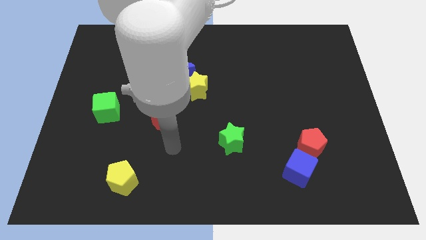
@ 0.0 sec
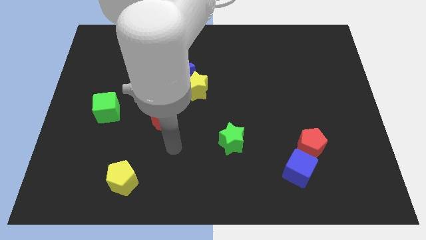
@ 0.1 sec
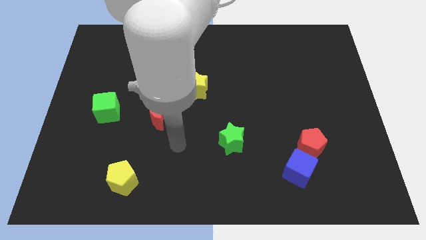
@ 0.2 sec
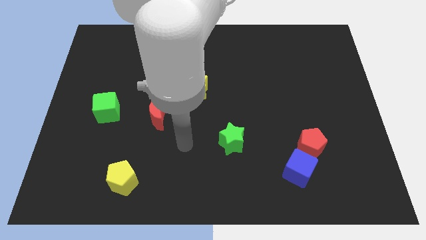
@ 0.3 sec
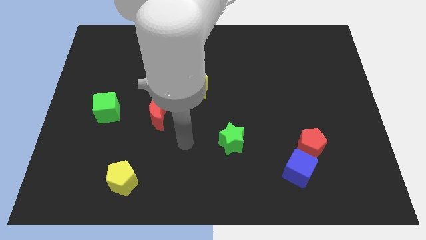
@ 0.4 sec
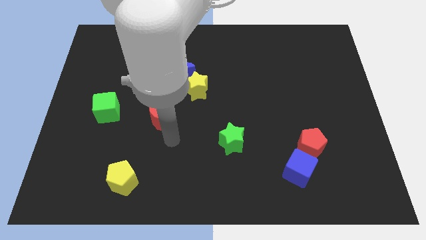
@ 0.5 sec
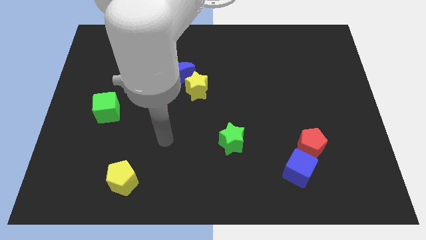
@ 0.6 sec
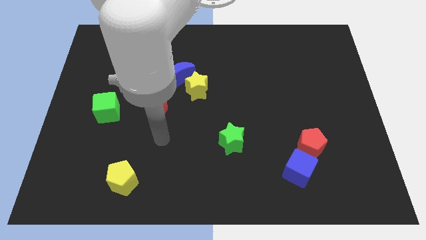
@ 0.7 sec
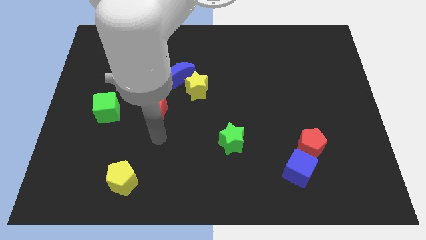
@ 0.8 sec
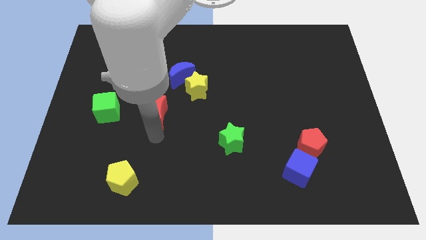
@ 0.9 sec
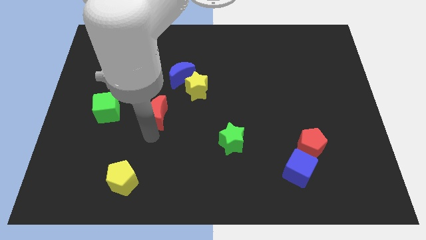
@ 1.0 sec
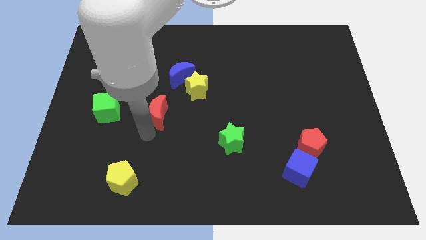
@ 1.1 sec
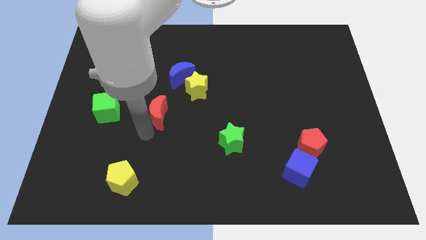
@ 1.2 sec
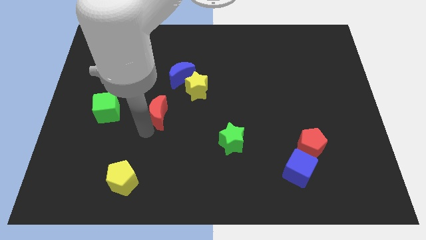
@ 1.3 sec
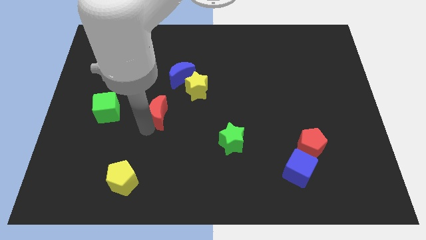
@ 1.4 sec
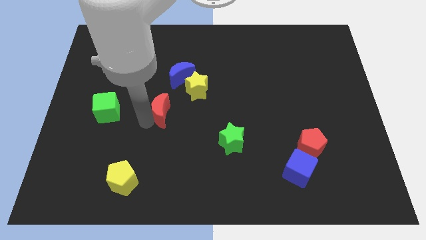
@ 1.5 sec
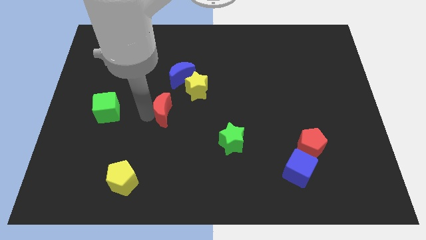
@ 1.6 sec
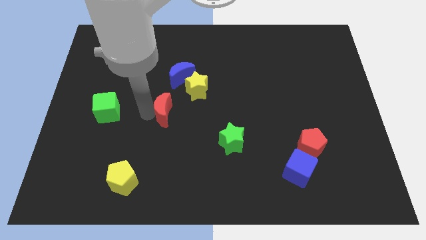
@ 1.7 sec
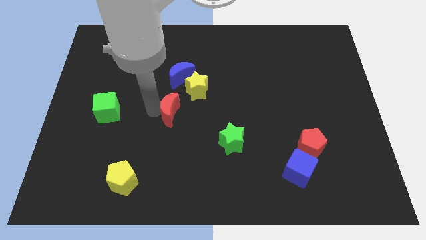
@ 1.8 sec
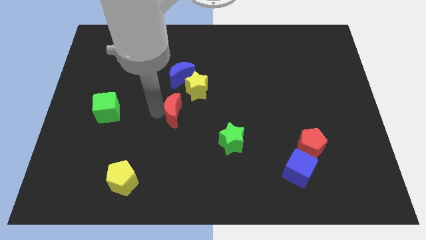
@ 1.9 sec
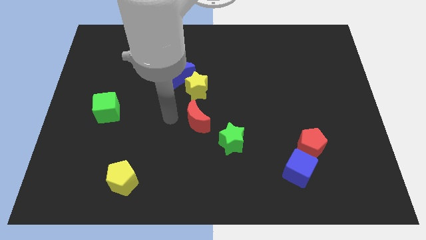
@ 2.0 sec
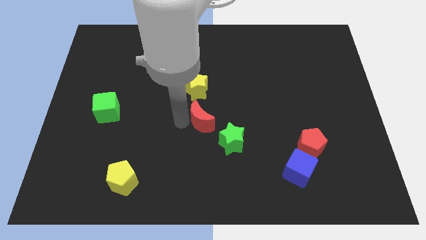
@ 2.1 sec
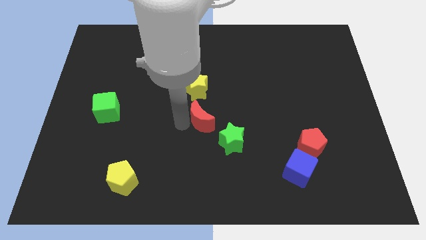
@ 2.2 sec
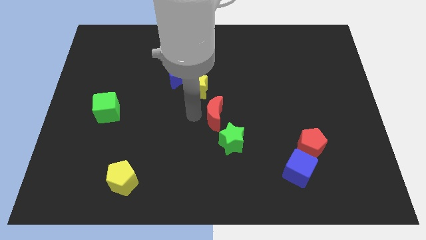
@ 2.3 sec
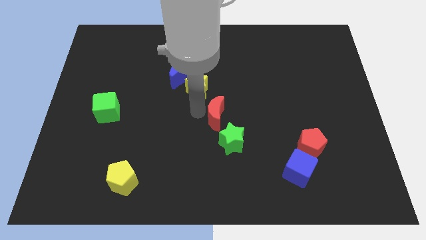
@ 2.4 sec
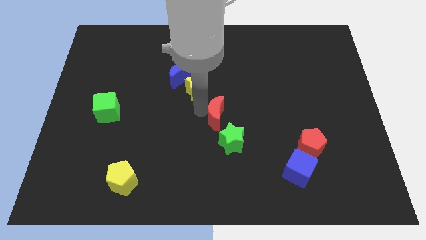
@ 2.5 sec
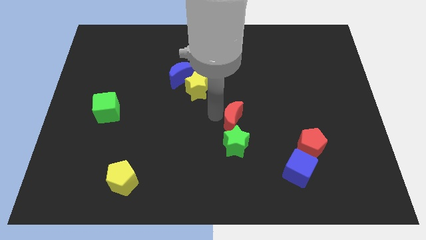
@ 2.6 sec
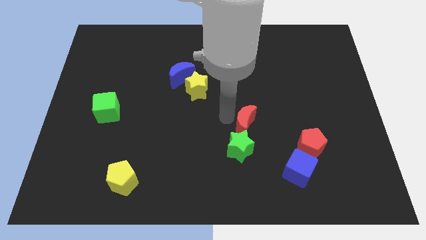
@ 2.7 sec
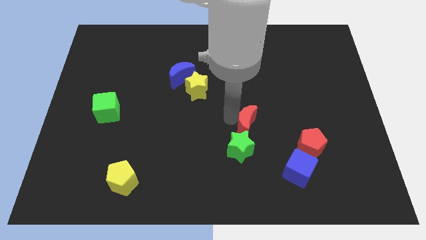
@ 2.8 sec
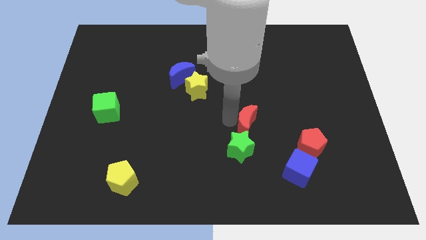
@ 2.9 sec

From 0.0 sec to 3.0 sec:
push the red crescent to top right of green star

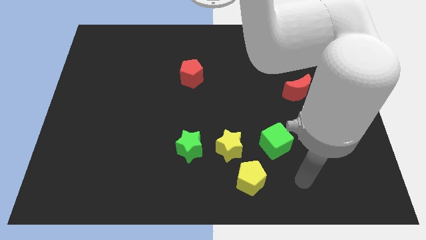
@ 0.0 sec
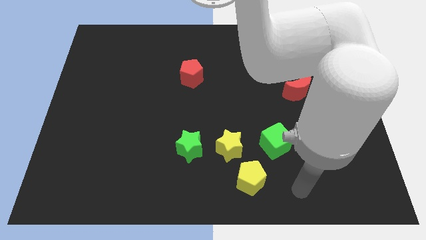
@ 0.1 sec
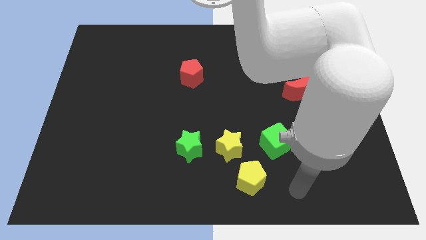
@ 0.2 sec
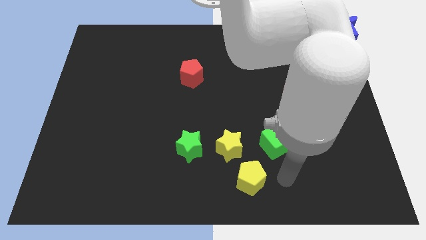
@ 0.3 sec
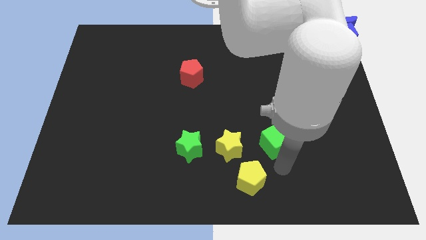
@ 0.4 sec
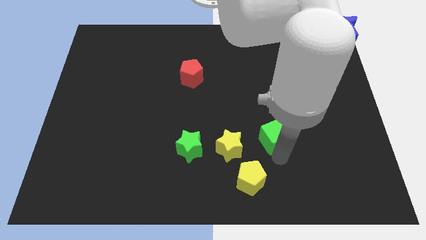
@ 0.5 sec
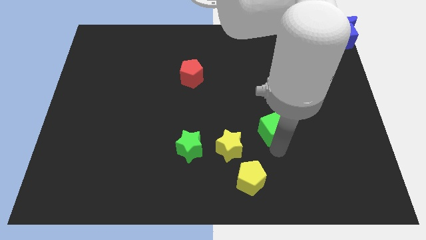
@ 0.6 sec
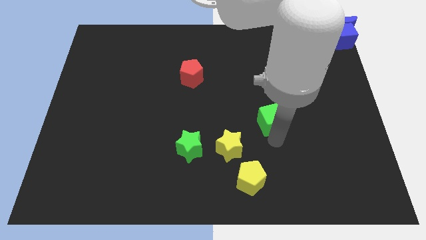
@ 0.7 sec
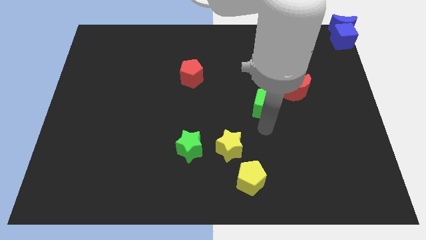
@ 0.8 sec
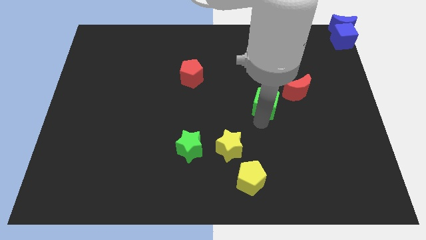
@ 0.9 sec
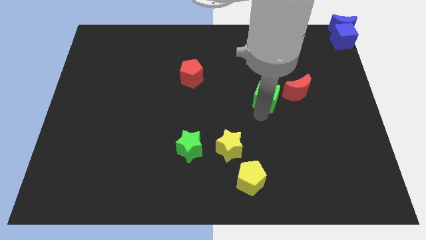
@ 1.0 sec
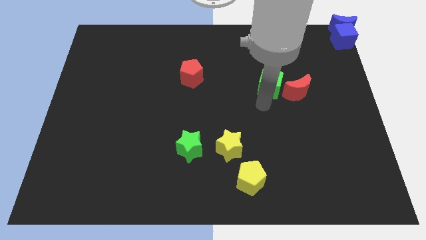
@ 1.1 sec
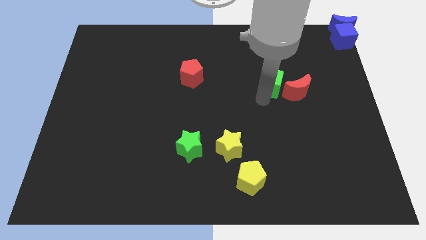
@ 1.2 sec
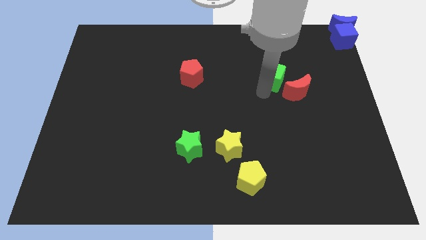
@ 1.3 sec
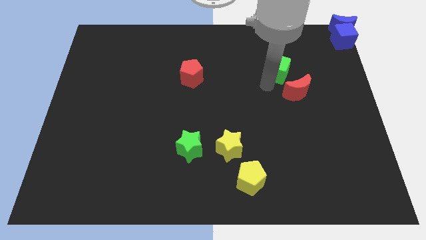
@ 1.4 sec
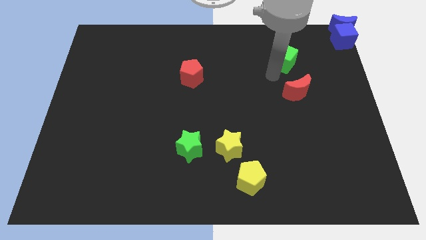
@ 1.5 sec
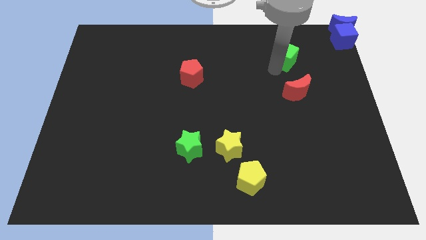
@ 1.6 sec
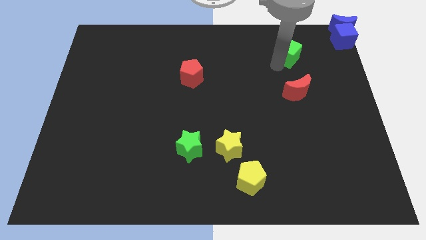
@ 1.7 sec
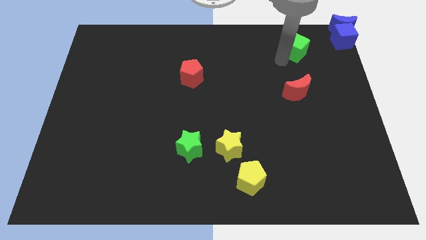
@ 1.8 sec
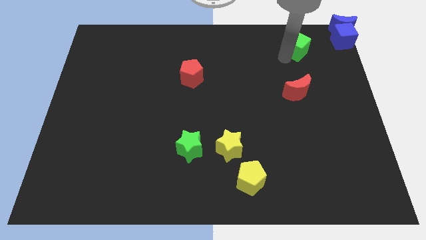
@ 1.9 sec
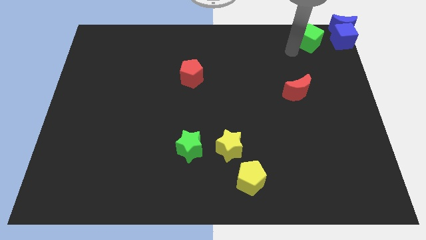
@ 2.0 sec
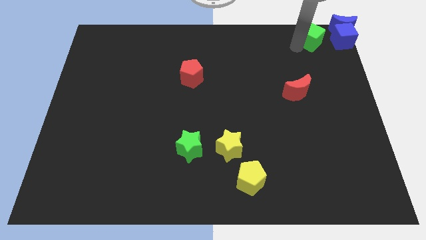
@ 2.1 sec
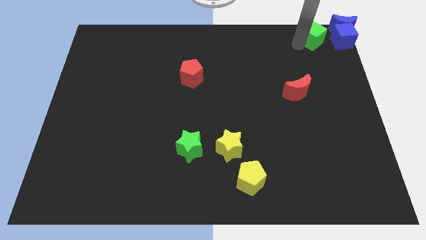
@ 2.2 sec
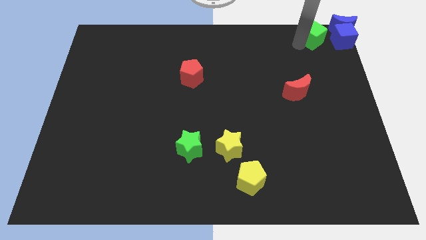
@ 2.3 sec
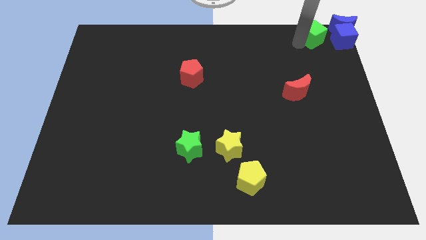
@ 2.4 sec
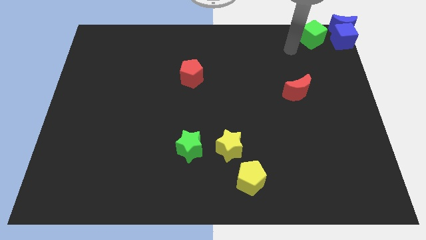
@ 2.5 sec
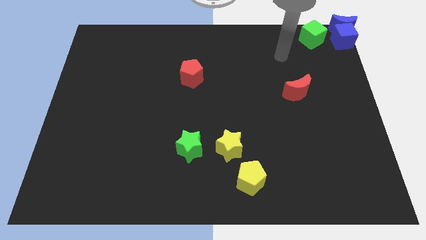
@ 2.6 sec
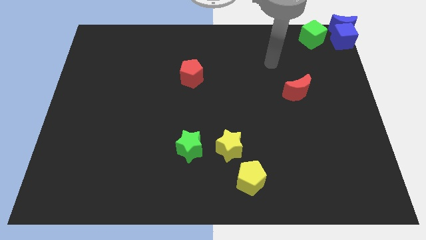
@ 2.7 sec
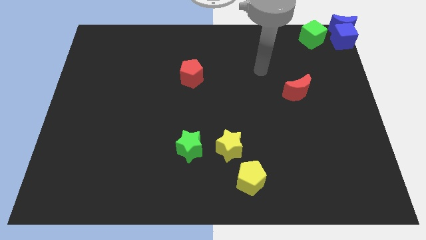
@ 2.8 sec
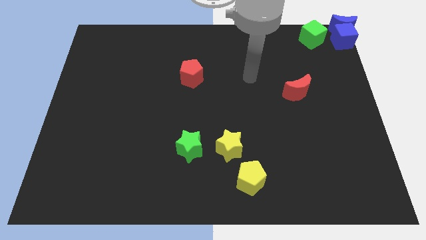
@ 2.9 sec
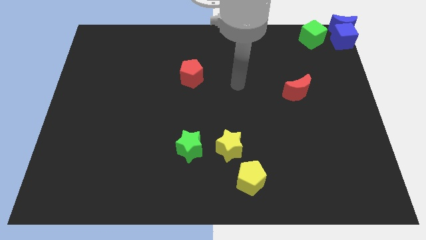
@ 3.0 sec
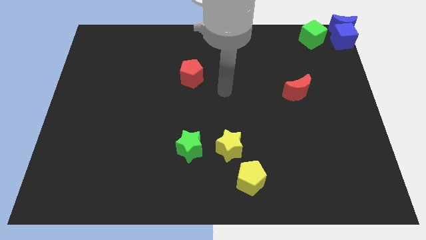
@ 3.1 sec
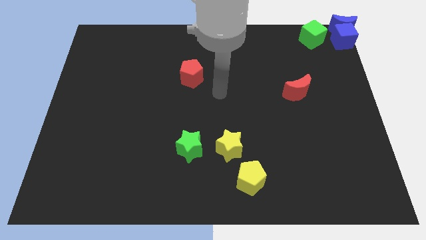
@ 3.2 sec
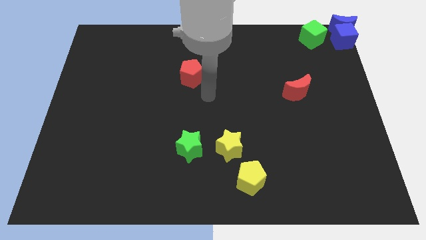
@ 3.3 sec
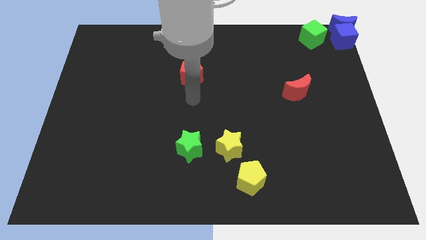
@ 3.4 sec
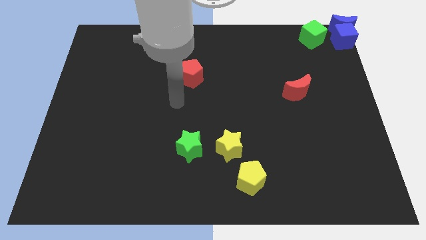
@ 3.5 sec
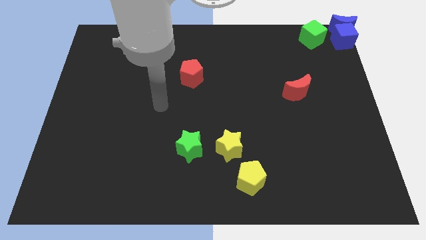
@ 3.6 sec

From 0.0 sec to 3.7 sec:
place the green cube to the left side of the blue cube

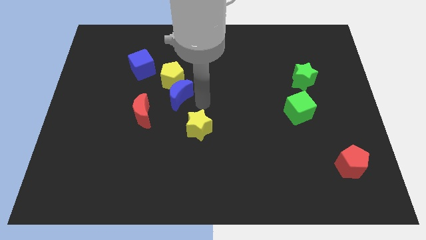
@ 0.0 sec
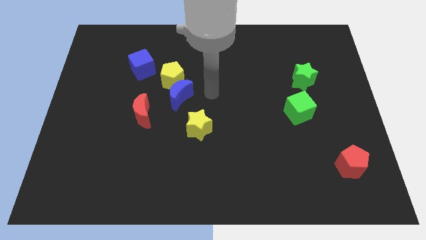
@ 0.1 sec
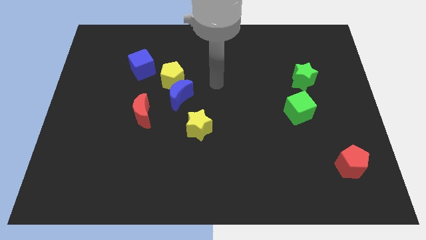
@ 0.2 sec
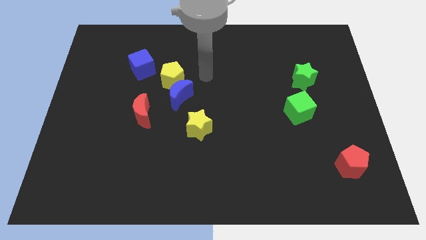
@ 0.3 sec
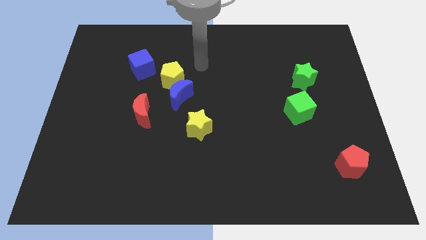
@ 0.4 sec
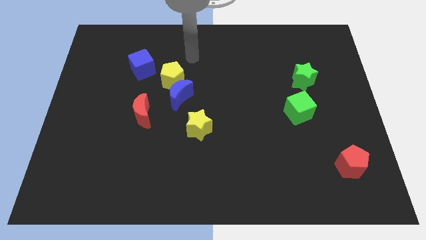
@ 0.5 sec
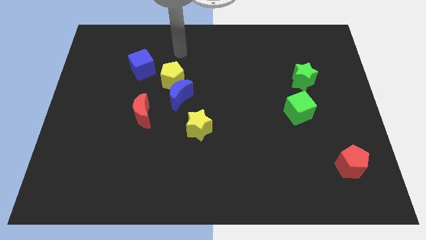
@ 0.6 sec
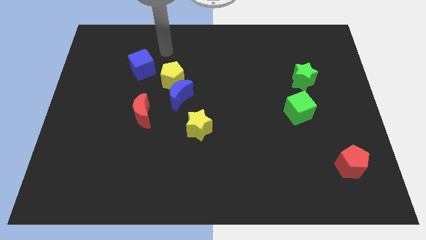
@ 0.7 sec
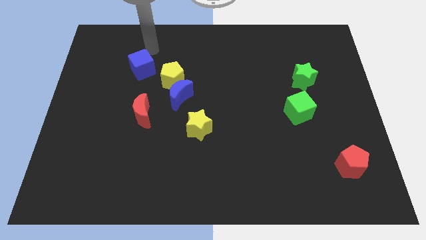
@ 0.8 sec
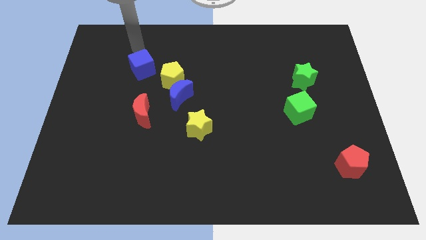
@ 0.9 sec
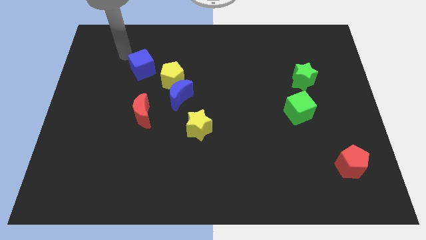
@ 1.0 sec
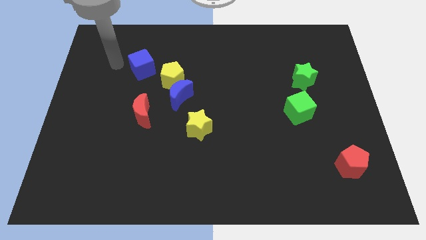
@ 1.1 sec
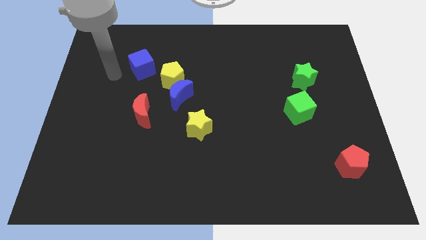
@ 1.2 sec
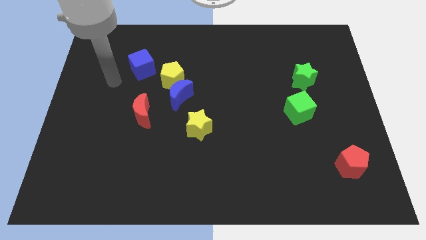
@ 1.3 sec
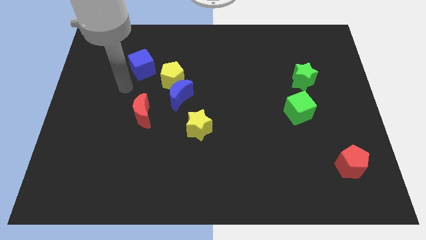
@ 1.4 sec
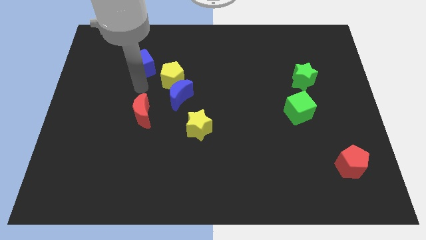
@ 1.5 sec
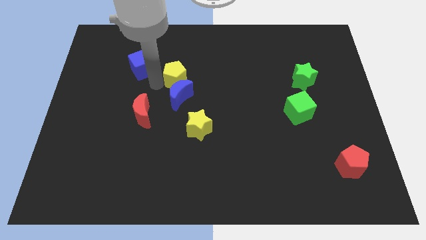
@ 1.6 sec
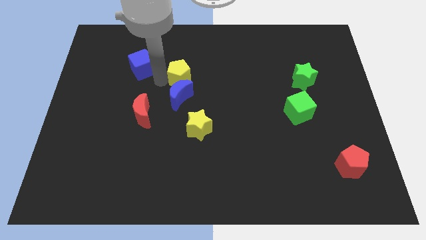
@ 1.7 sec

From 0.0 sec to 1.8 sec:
move your arm towards the yellow pentagon

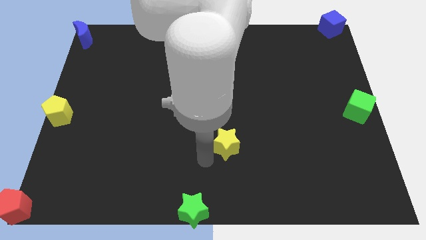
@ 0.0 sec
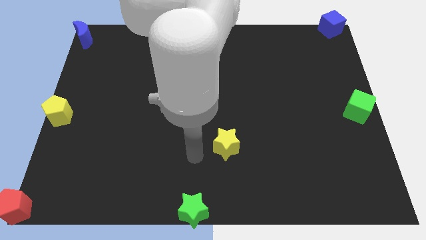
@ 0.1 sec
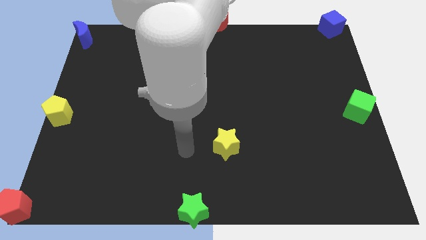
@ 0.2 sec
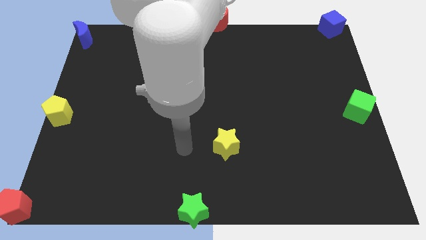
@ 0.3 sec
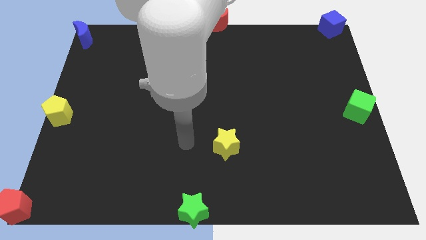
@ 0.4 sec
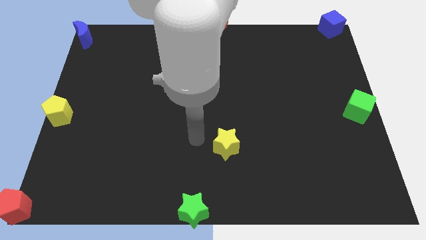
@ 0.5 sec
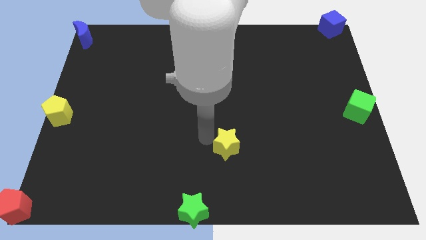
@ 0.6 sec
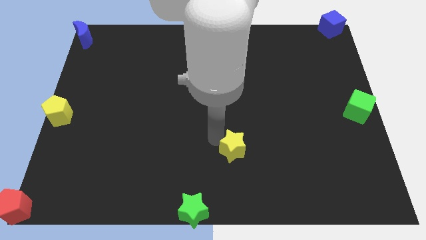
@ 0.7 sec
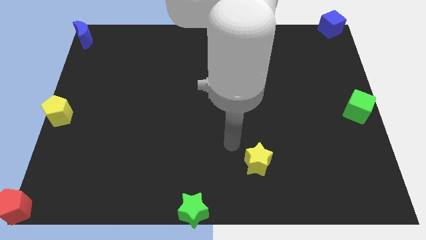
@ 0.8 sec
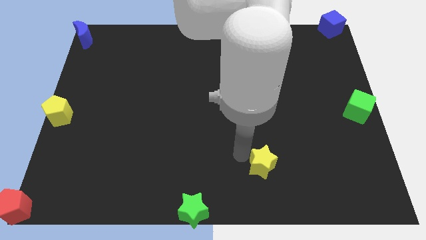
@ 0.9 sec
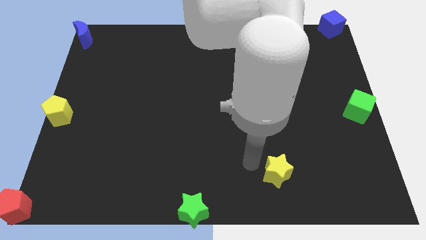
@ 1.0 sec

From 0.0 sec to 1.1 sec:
place the yellow star in between the green blocks
